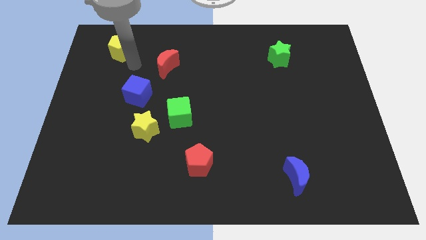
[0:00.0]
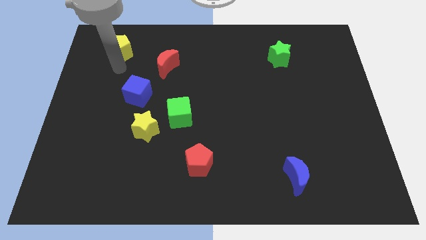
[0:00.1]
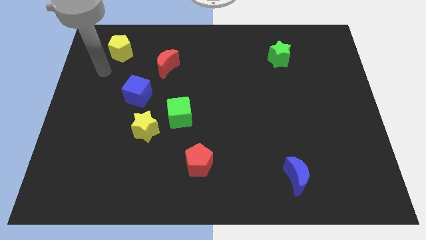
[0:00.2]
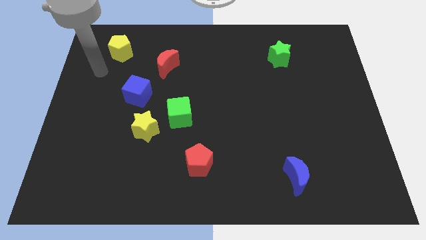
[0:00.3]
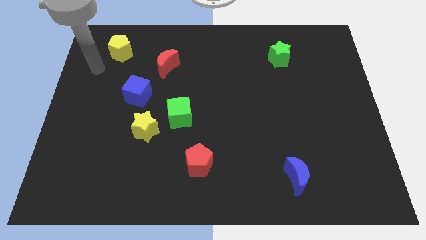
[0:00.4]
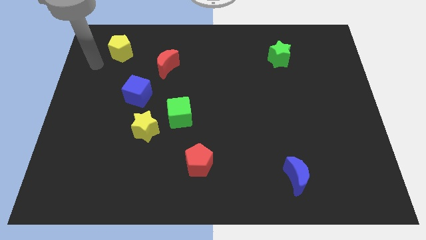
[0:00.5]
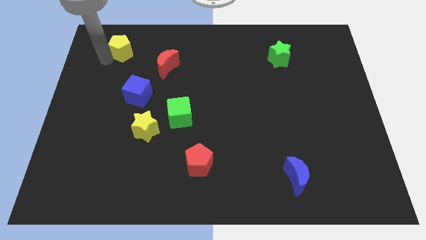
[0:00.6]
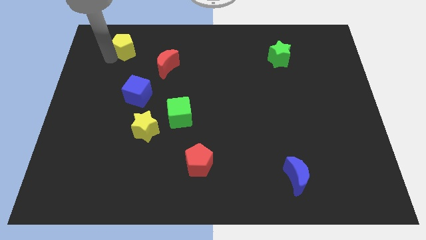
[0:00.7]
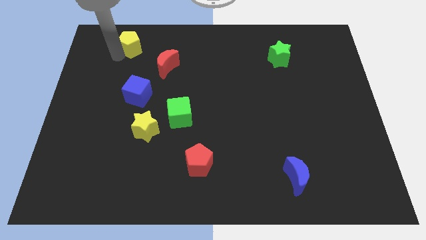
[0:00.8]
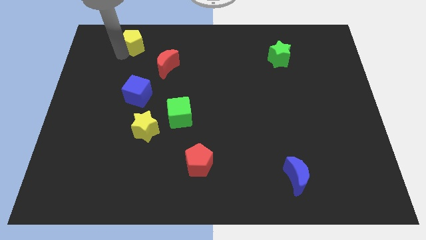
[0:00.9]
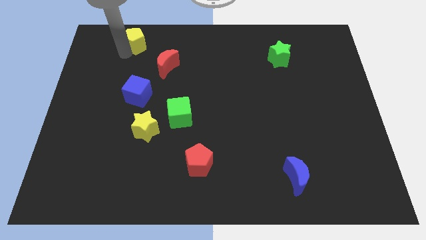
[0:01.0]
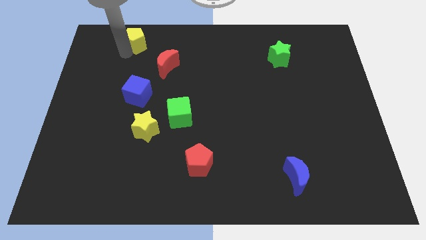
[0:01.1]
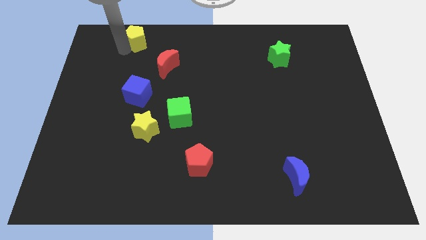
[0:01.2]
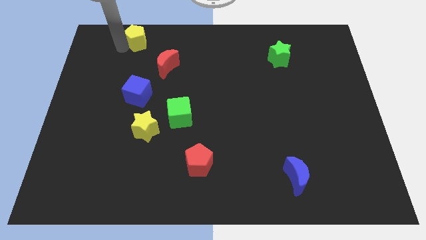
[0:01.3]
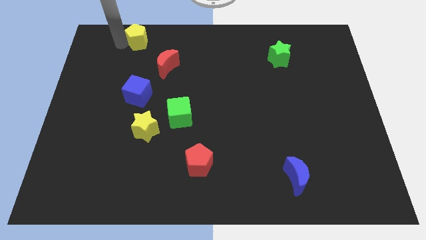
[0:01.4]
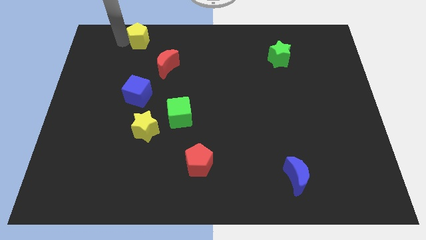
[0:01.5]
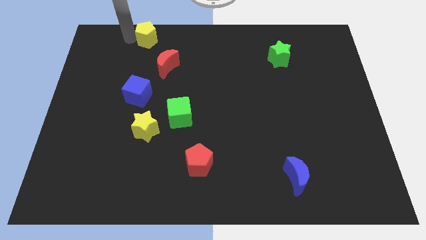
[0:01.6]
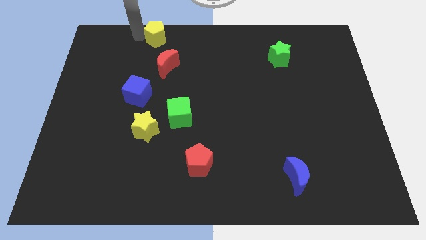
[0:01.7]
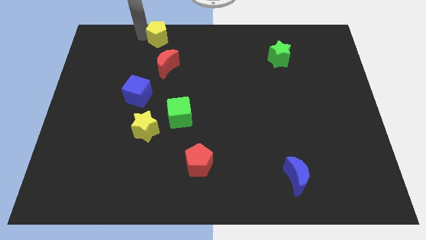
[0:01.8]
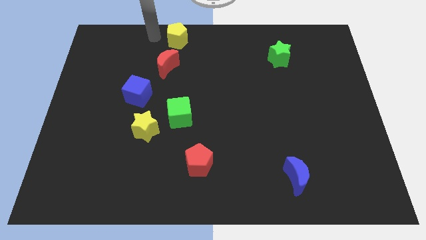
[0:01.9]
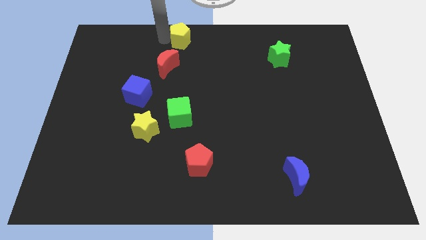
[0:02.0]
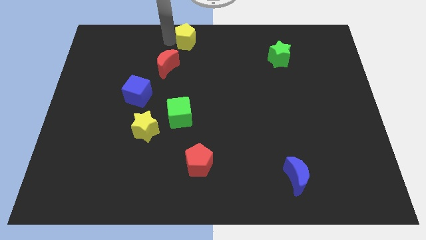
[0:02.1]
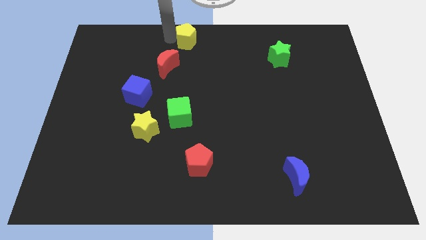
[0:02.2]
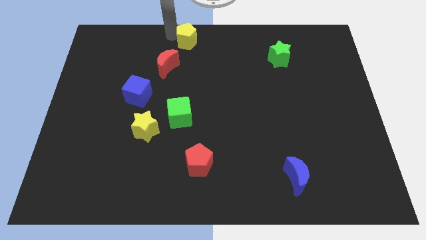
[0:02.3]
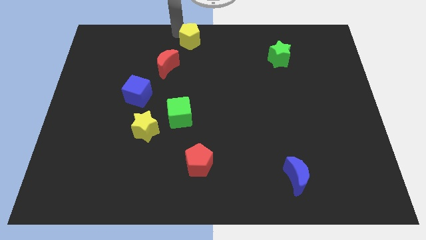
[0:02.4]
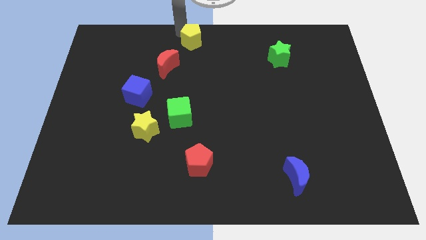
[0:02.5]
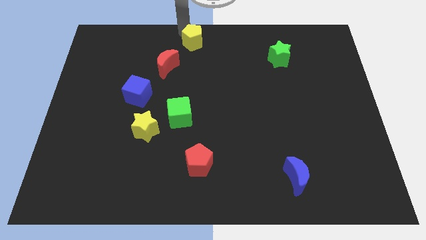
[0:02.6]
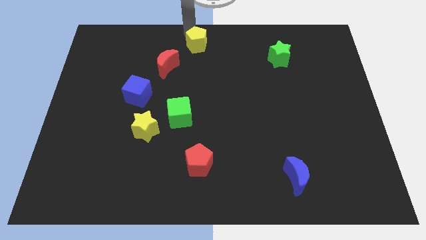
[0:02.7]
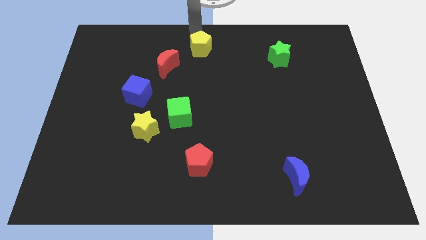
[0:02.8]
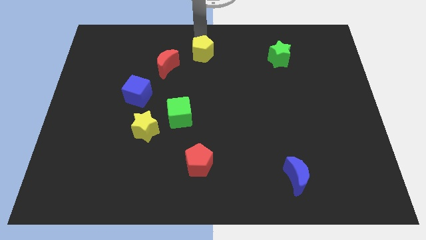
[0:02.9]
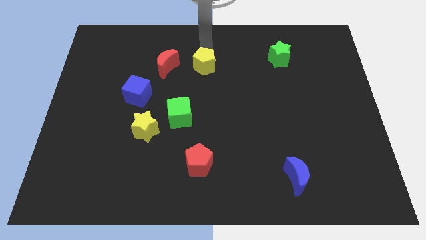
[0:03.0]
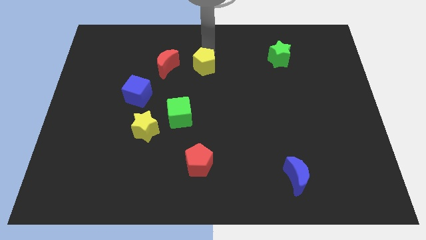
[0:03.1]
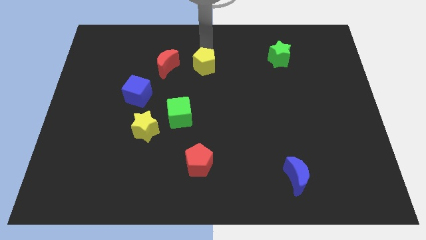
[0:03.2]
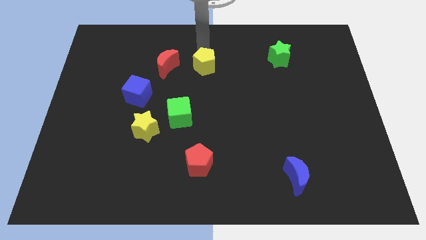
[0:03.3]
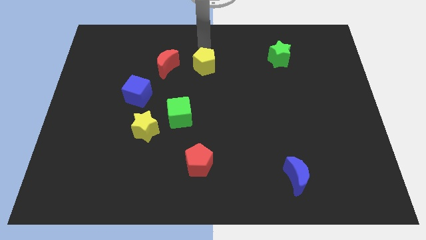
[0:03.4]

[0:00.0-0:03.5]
move yellow pentagon to the right side of the red crescent

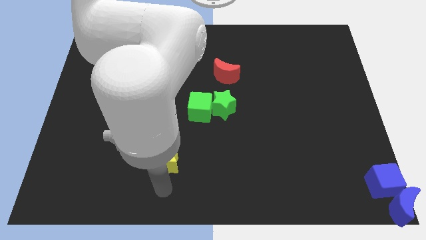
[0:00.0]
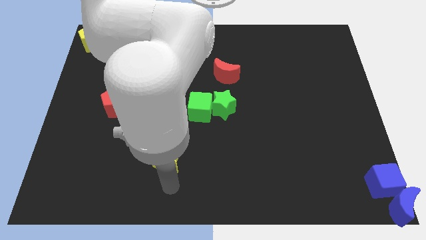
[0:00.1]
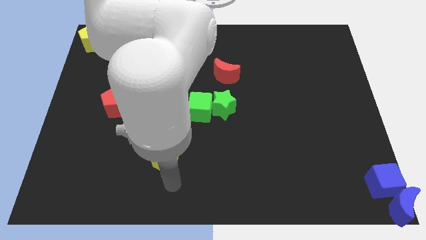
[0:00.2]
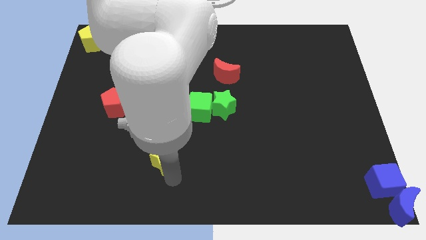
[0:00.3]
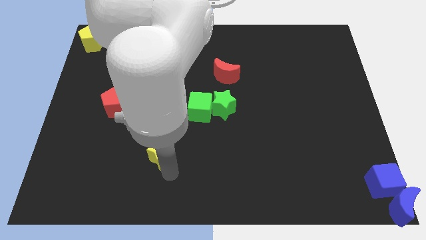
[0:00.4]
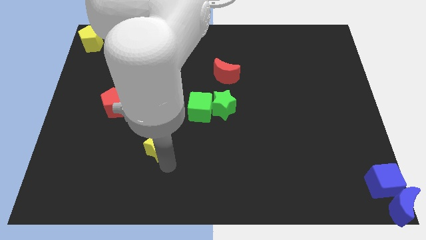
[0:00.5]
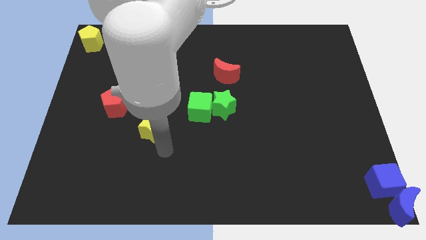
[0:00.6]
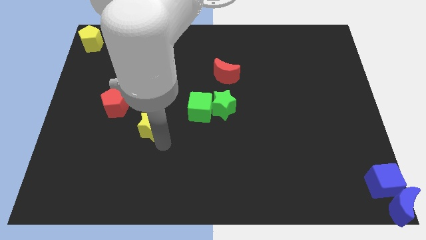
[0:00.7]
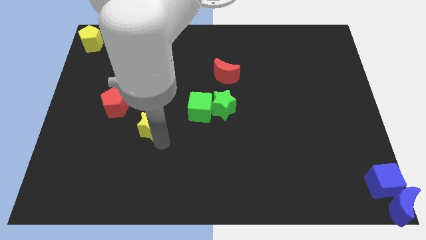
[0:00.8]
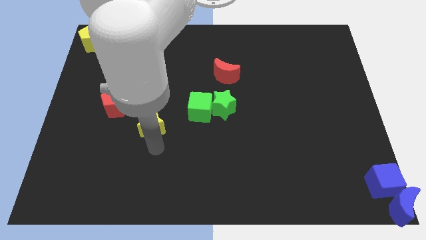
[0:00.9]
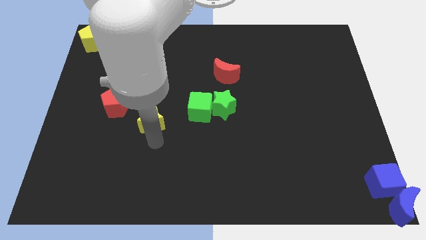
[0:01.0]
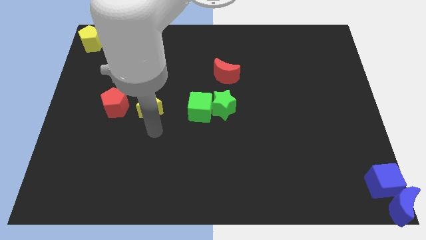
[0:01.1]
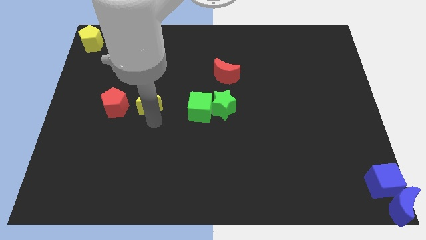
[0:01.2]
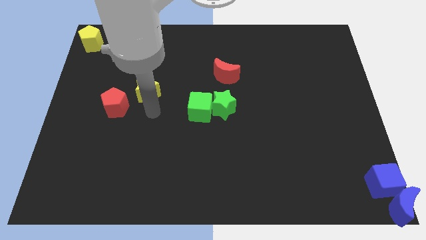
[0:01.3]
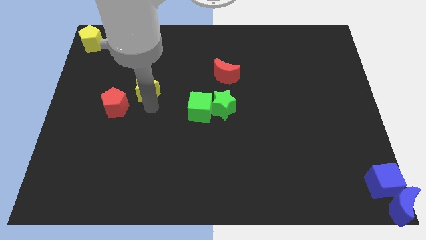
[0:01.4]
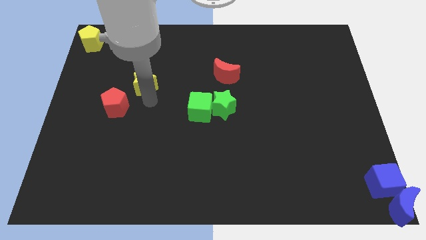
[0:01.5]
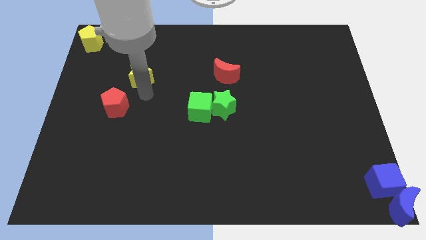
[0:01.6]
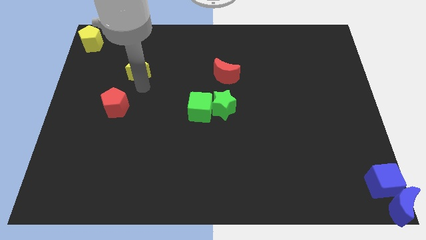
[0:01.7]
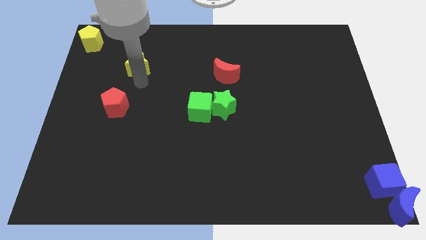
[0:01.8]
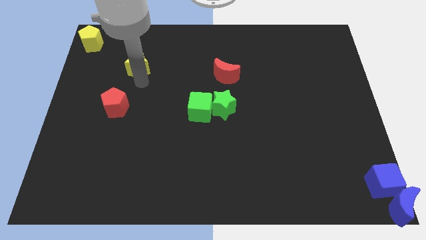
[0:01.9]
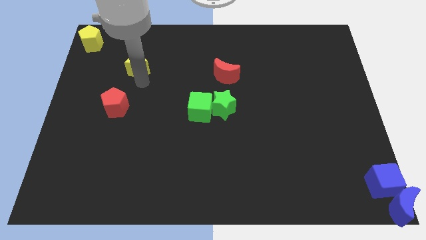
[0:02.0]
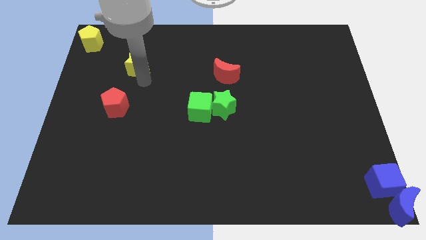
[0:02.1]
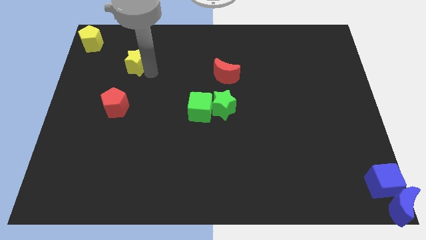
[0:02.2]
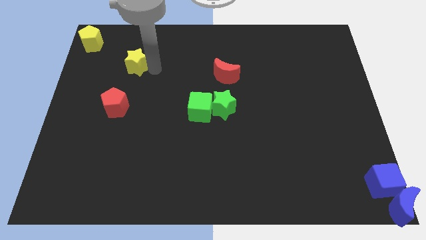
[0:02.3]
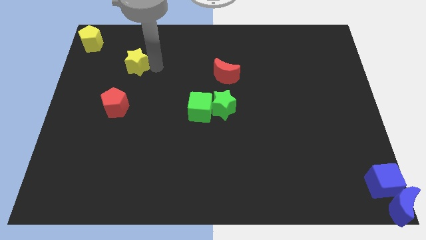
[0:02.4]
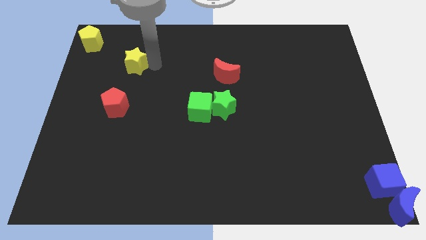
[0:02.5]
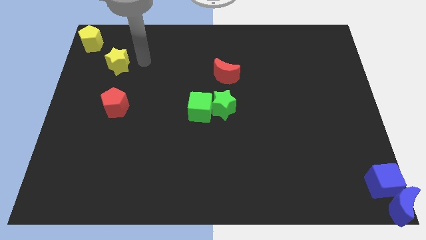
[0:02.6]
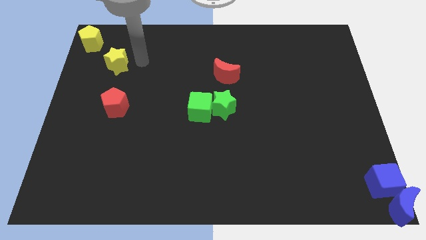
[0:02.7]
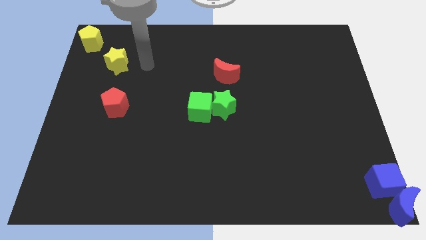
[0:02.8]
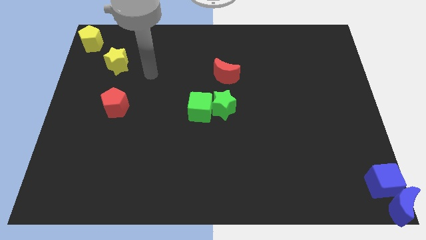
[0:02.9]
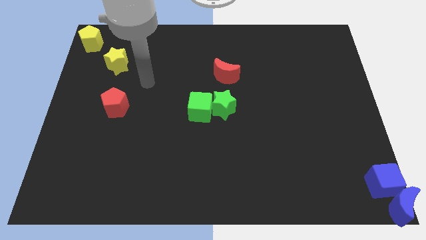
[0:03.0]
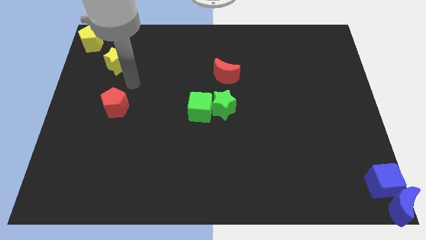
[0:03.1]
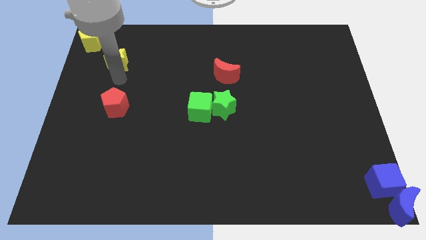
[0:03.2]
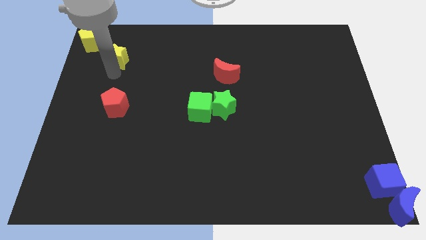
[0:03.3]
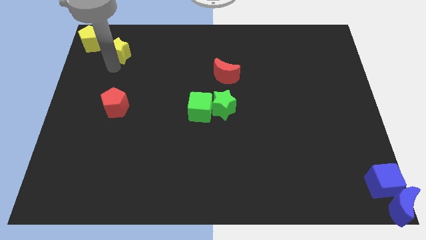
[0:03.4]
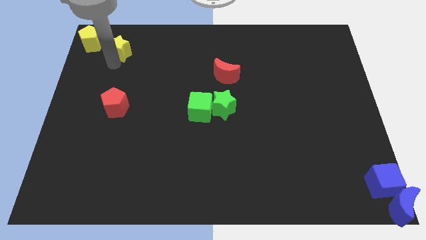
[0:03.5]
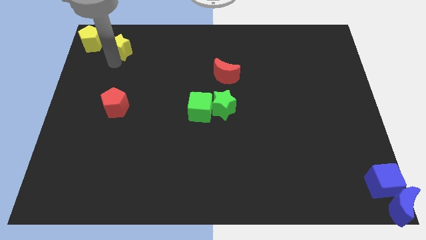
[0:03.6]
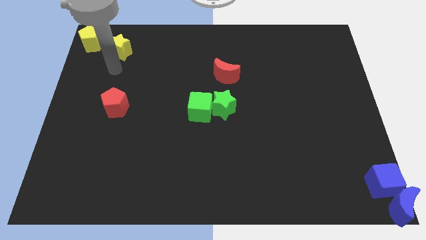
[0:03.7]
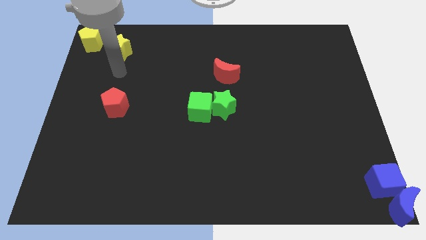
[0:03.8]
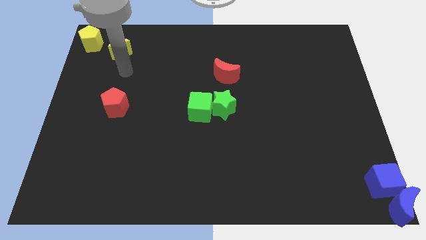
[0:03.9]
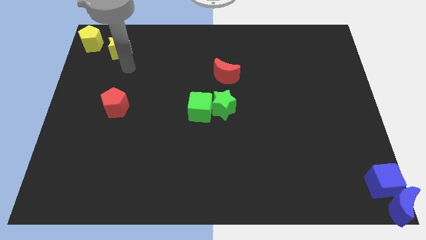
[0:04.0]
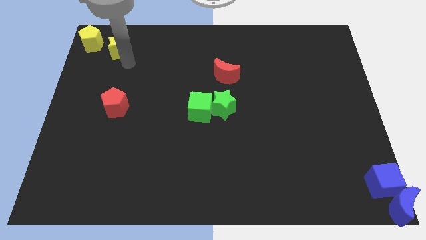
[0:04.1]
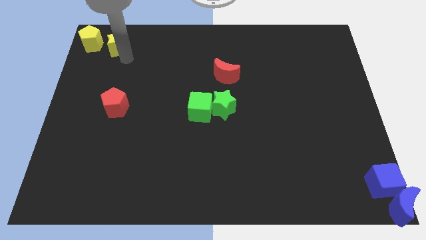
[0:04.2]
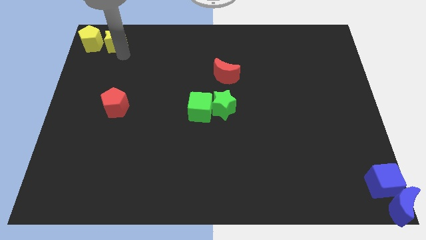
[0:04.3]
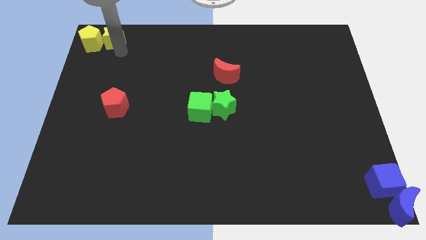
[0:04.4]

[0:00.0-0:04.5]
move the yellow star to the right side of the yellow pentagon

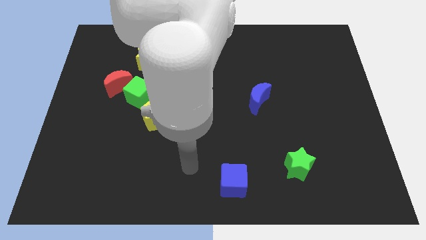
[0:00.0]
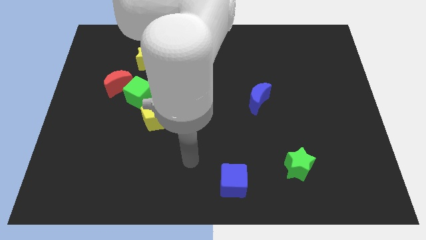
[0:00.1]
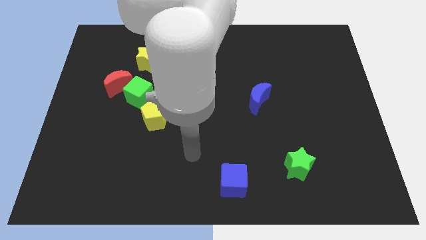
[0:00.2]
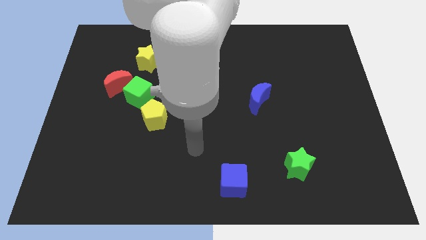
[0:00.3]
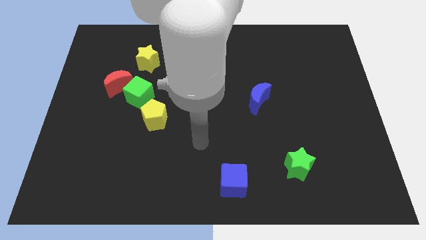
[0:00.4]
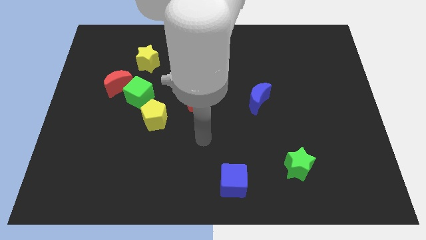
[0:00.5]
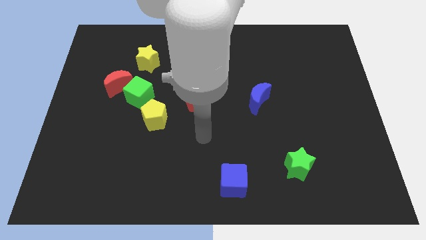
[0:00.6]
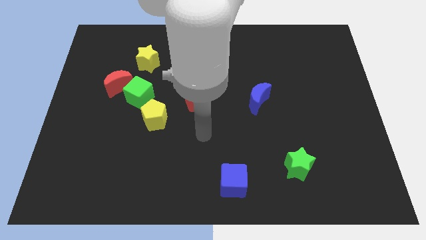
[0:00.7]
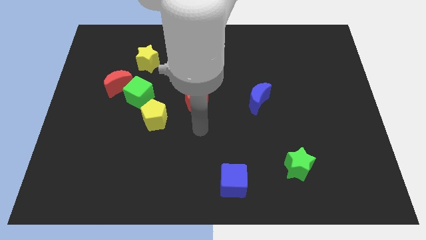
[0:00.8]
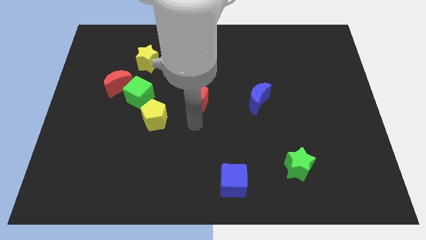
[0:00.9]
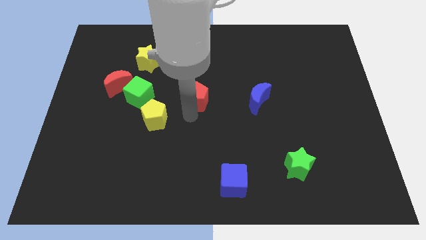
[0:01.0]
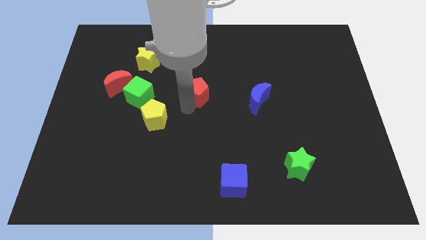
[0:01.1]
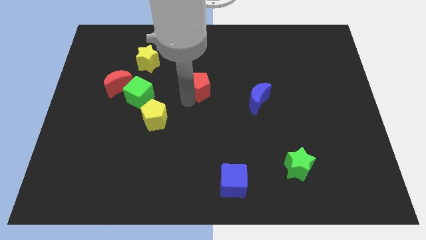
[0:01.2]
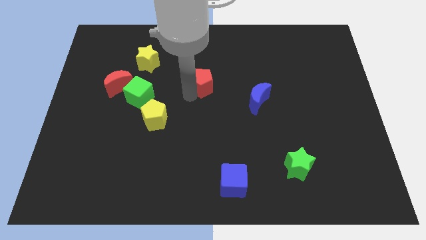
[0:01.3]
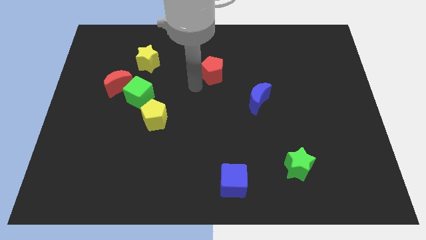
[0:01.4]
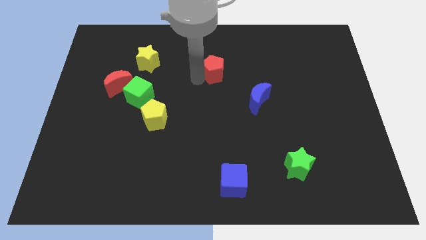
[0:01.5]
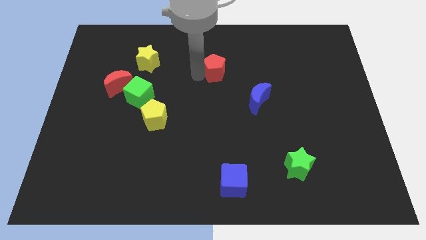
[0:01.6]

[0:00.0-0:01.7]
push the red pentagon slightly up
